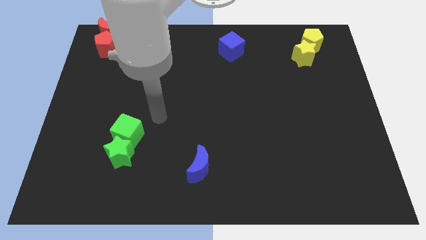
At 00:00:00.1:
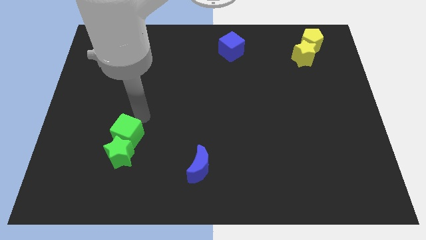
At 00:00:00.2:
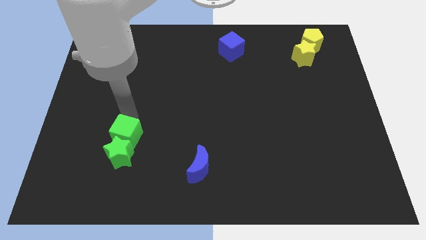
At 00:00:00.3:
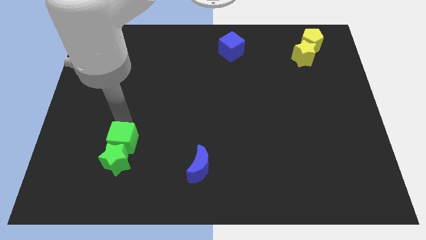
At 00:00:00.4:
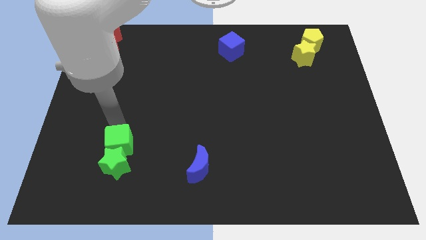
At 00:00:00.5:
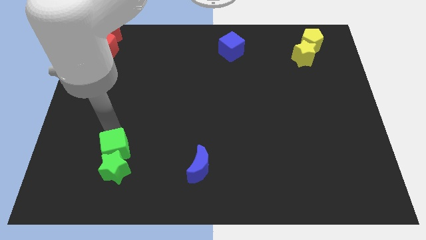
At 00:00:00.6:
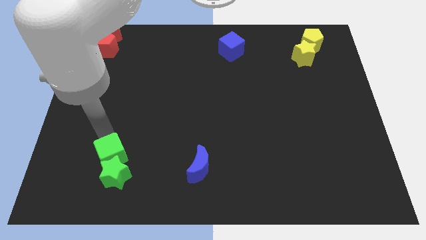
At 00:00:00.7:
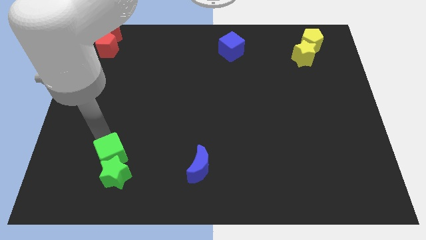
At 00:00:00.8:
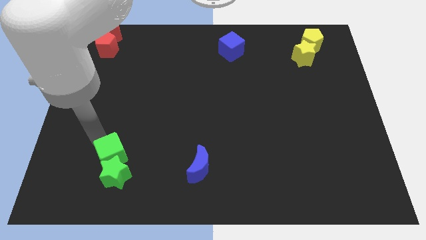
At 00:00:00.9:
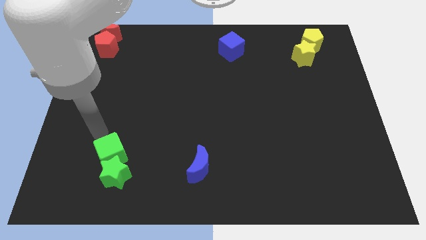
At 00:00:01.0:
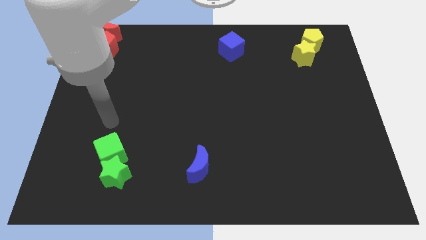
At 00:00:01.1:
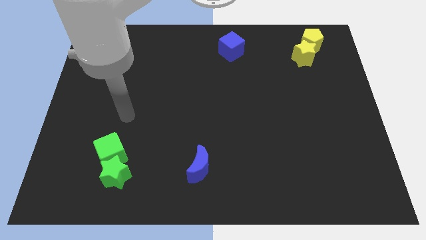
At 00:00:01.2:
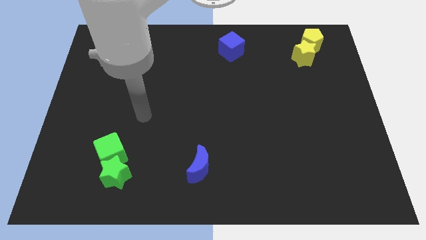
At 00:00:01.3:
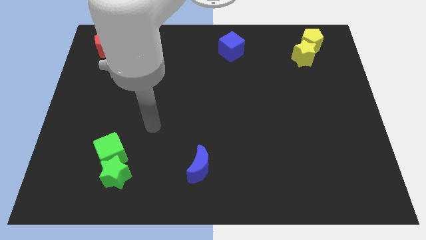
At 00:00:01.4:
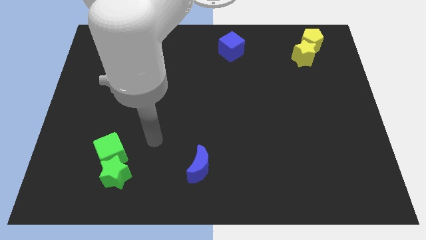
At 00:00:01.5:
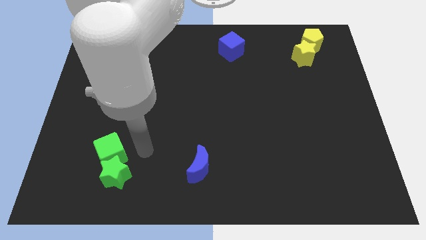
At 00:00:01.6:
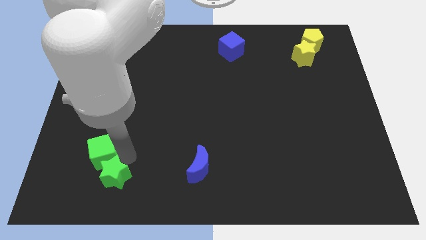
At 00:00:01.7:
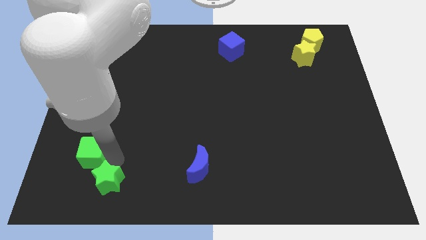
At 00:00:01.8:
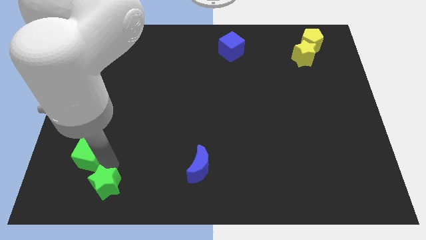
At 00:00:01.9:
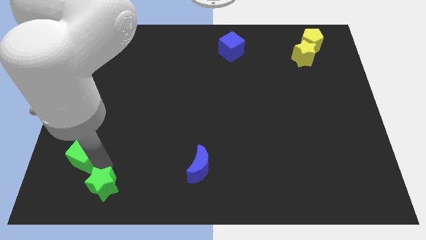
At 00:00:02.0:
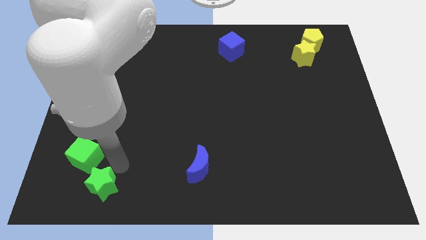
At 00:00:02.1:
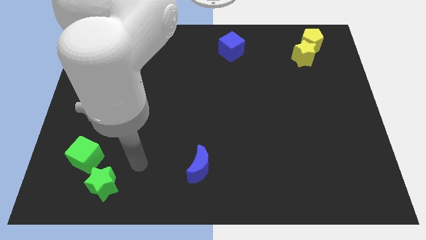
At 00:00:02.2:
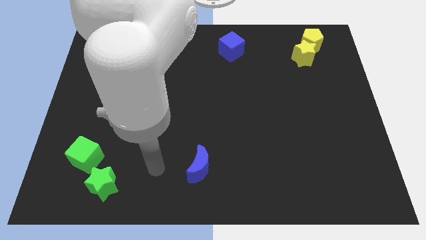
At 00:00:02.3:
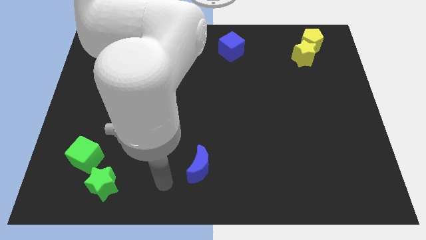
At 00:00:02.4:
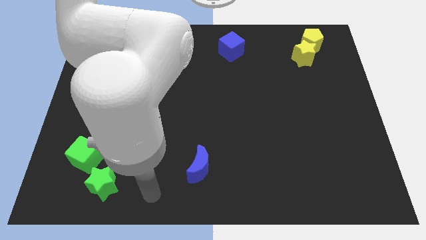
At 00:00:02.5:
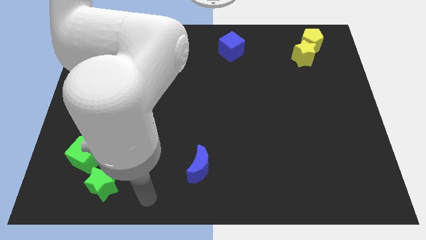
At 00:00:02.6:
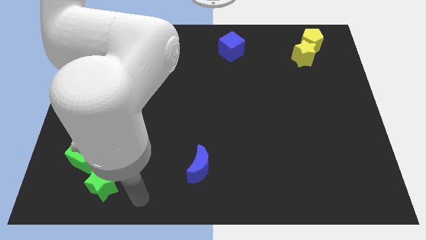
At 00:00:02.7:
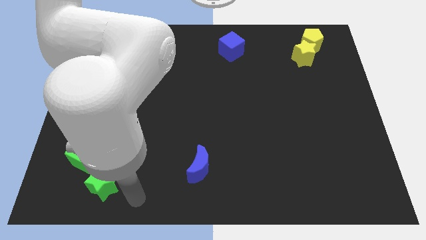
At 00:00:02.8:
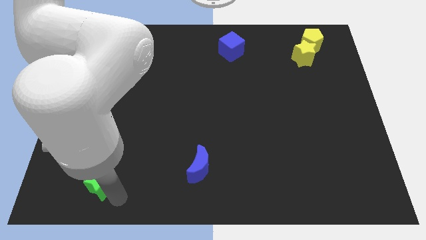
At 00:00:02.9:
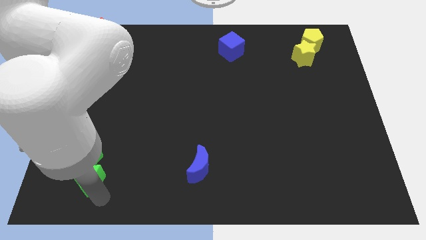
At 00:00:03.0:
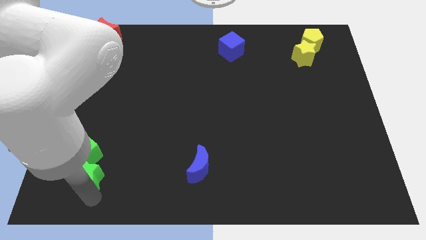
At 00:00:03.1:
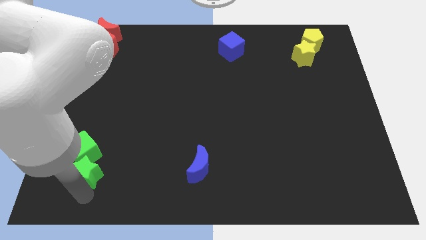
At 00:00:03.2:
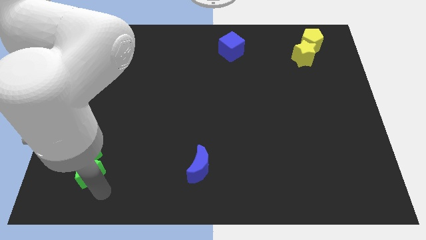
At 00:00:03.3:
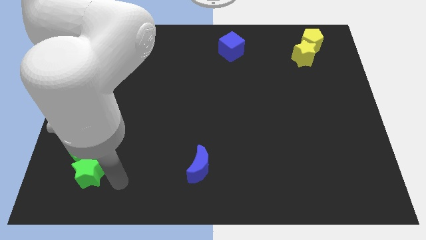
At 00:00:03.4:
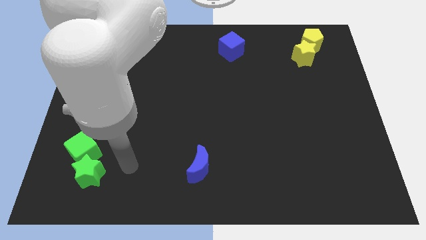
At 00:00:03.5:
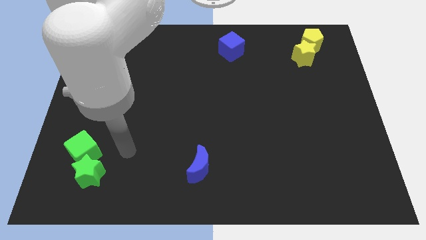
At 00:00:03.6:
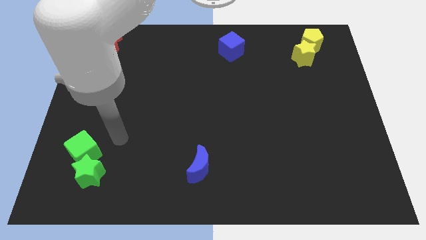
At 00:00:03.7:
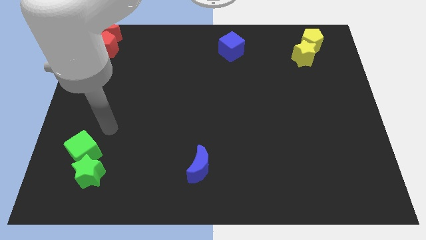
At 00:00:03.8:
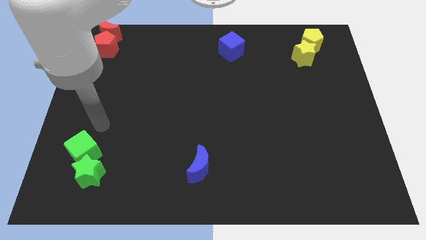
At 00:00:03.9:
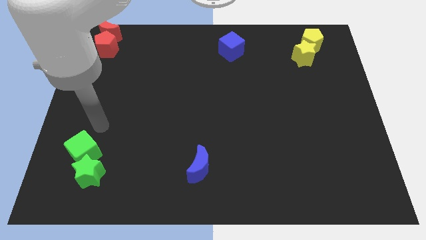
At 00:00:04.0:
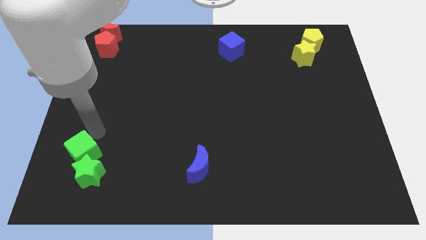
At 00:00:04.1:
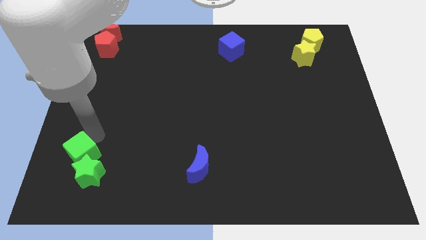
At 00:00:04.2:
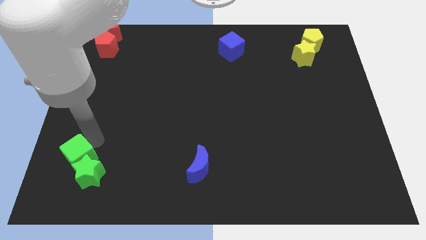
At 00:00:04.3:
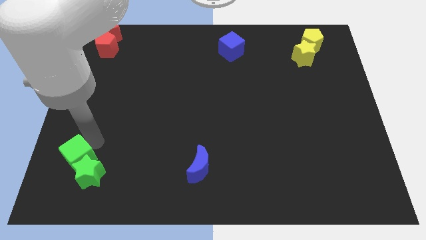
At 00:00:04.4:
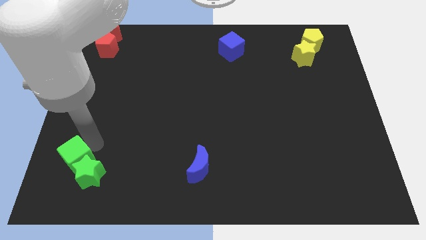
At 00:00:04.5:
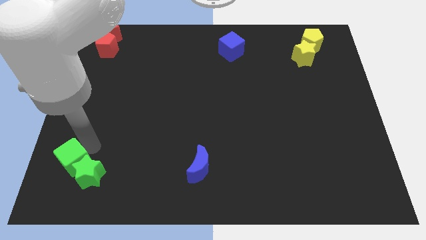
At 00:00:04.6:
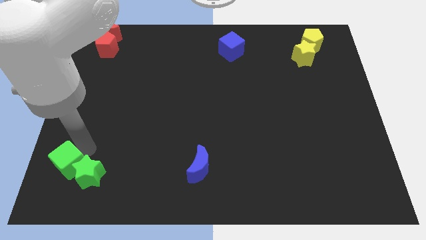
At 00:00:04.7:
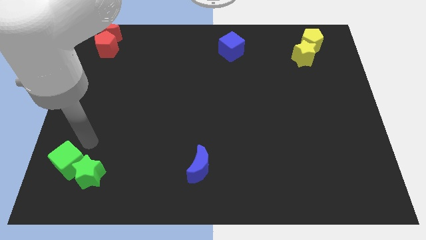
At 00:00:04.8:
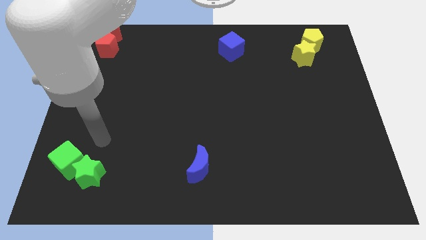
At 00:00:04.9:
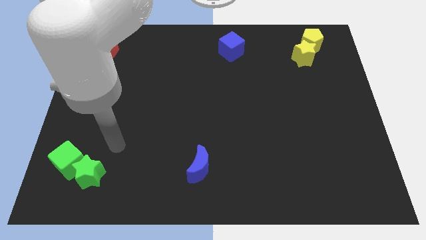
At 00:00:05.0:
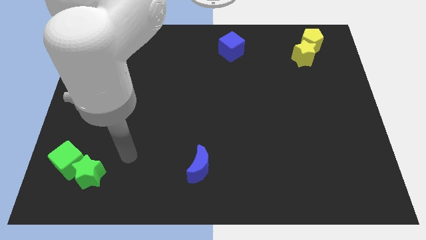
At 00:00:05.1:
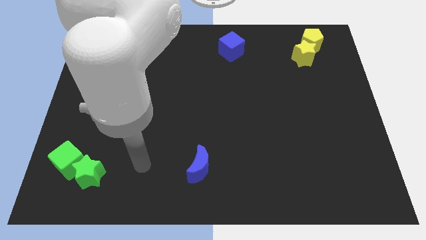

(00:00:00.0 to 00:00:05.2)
move the green star and green cube near to the bottom left corner of the board

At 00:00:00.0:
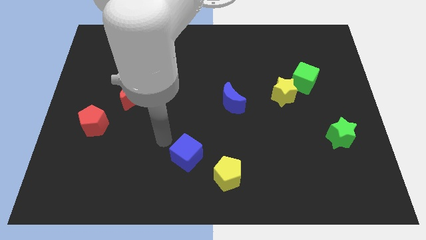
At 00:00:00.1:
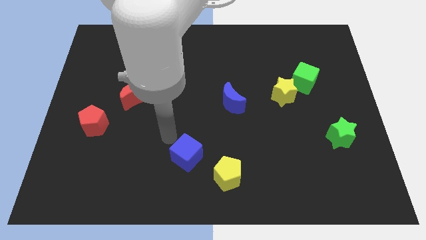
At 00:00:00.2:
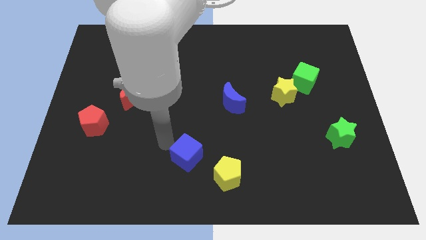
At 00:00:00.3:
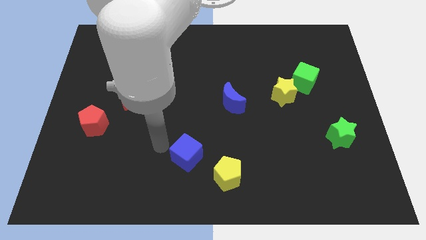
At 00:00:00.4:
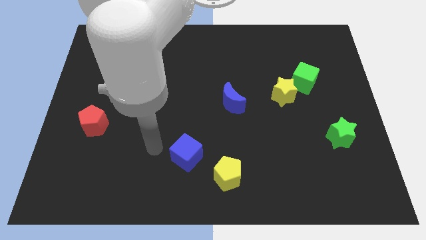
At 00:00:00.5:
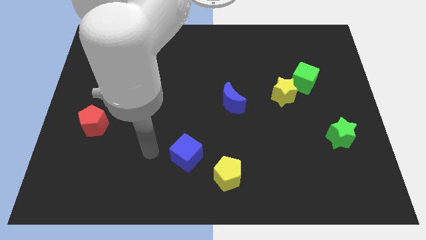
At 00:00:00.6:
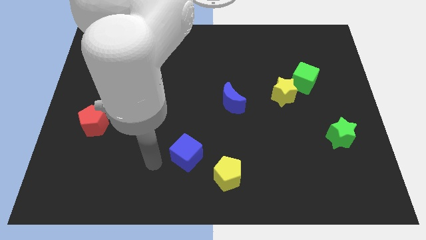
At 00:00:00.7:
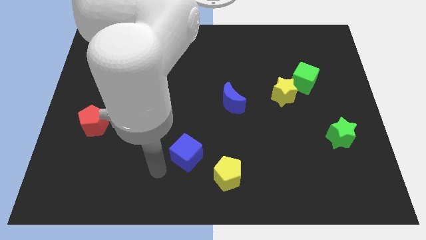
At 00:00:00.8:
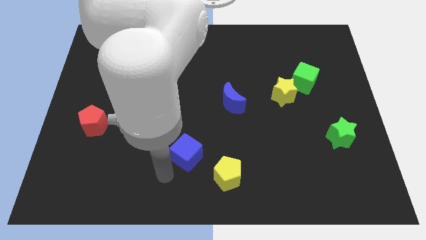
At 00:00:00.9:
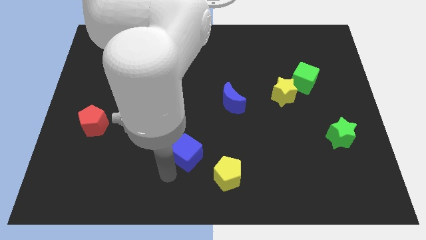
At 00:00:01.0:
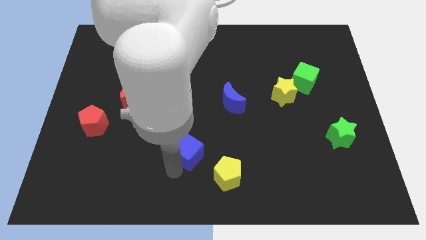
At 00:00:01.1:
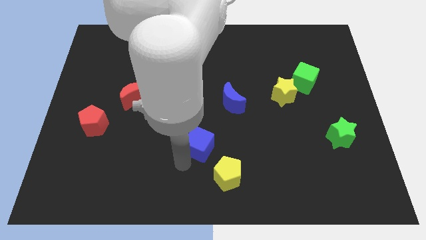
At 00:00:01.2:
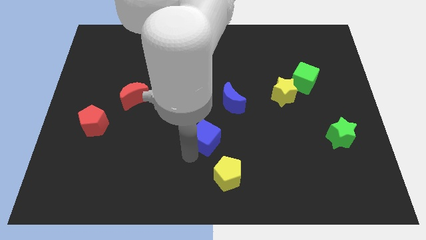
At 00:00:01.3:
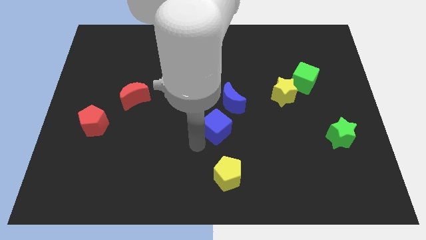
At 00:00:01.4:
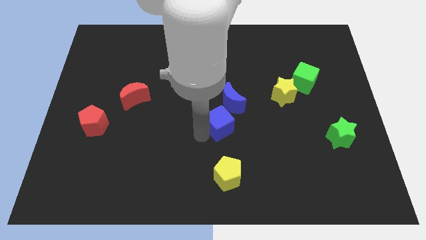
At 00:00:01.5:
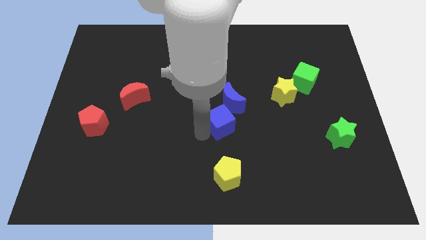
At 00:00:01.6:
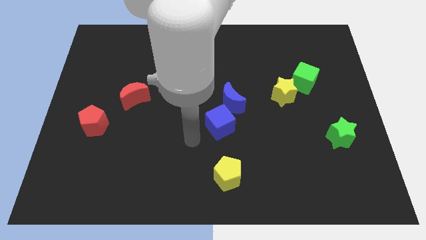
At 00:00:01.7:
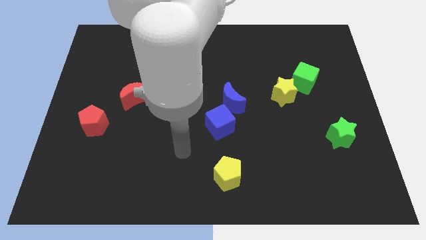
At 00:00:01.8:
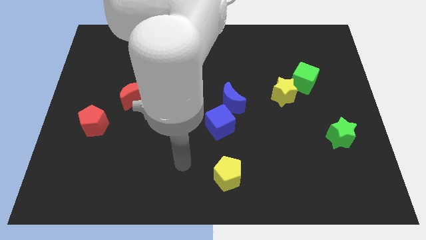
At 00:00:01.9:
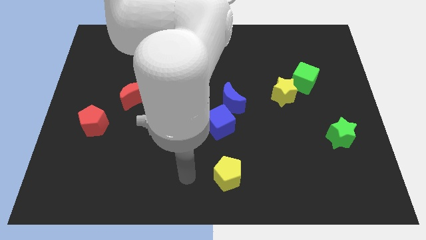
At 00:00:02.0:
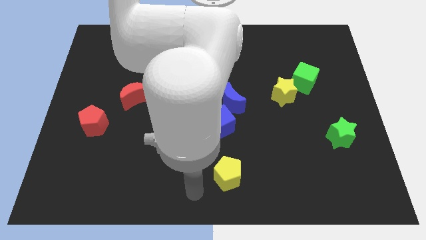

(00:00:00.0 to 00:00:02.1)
move the blue cube close to the blue moon

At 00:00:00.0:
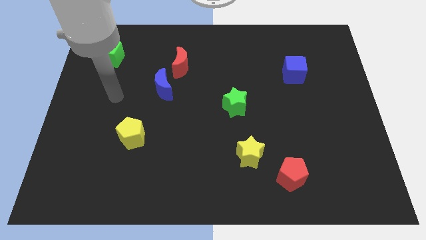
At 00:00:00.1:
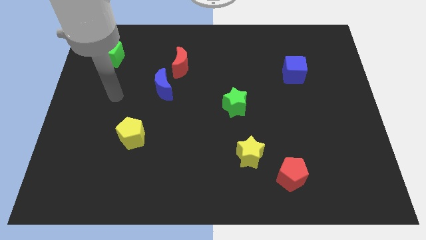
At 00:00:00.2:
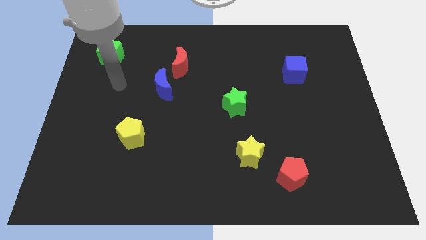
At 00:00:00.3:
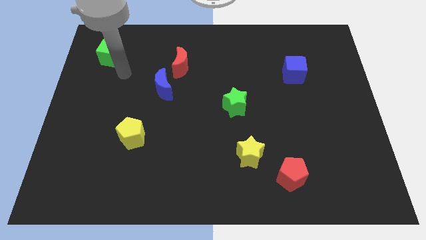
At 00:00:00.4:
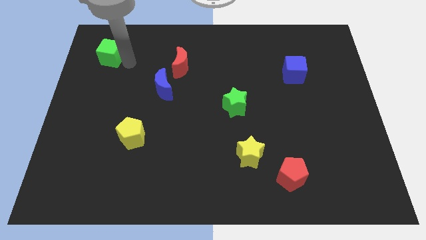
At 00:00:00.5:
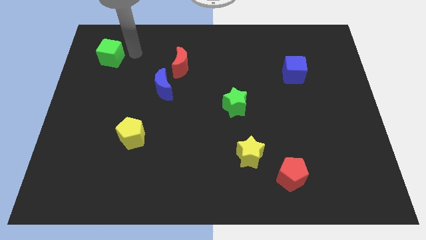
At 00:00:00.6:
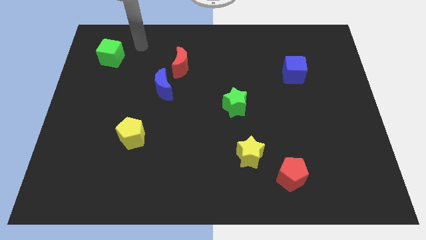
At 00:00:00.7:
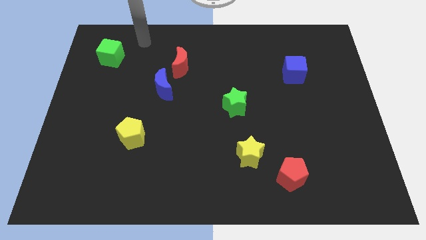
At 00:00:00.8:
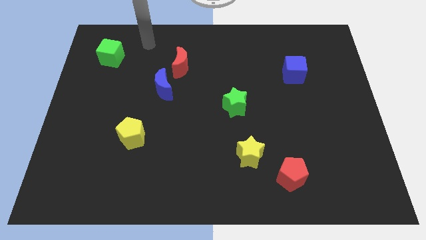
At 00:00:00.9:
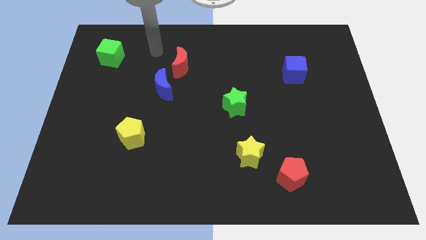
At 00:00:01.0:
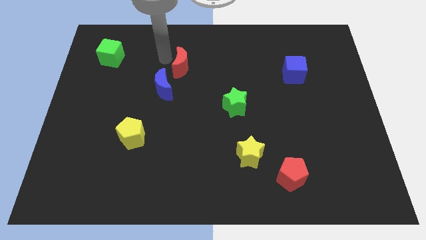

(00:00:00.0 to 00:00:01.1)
put your arm vertically above the blue moon

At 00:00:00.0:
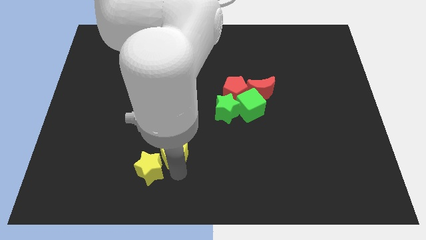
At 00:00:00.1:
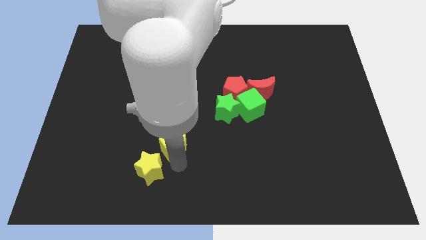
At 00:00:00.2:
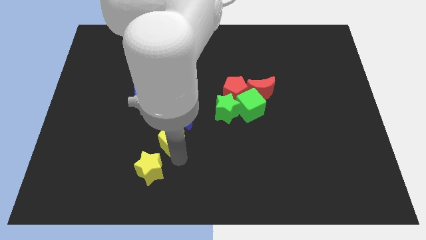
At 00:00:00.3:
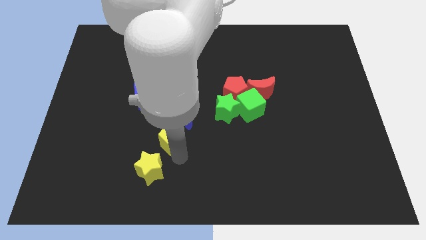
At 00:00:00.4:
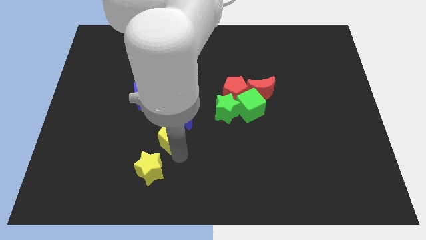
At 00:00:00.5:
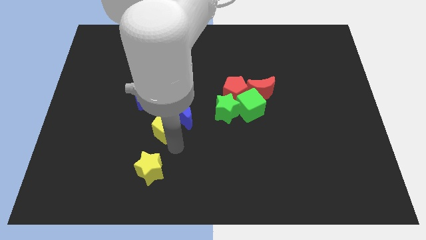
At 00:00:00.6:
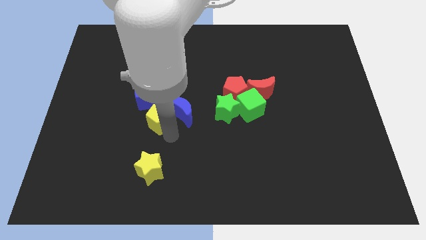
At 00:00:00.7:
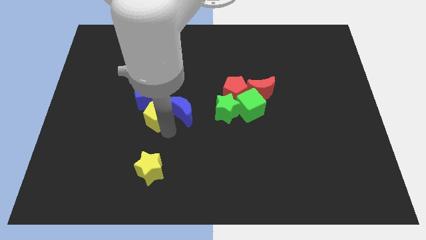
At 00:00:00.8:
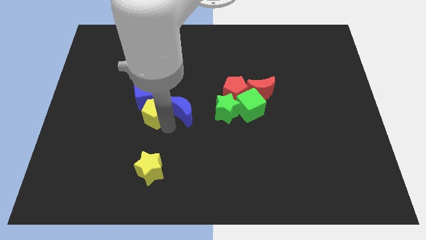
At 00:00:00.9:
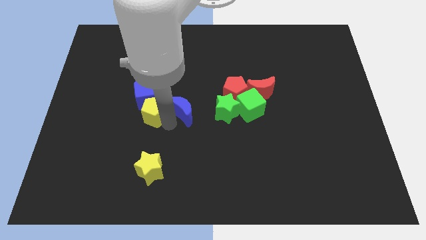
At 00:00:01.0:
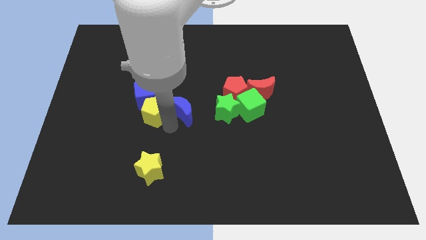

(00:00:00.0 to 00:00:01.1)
push yellow pentagon below blue cube
